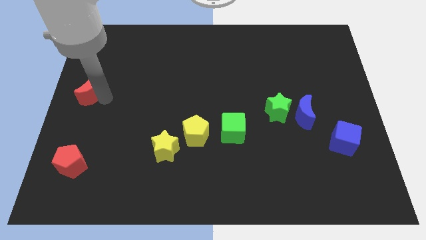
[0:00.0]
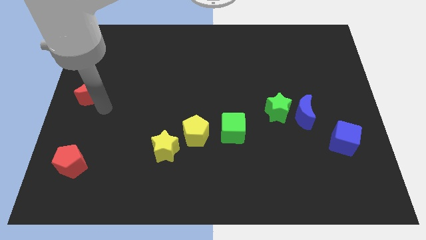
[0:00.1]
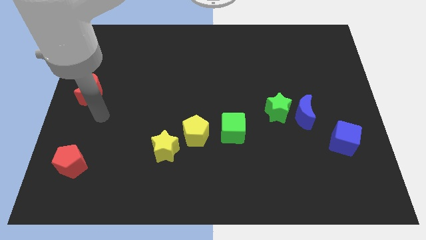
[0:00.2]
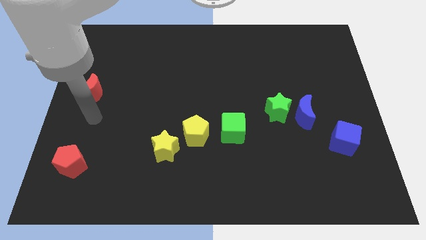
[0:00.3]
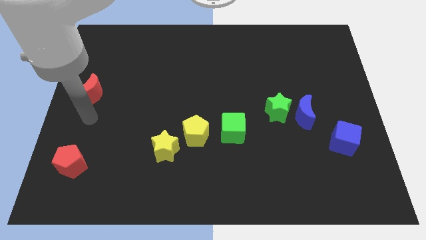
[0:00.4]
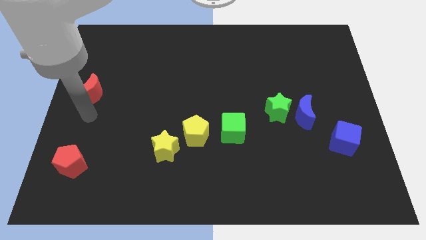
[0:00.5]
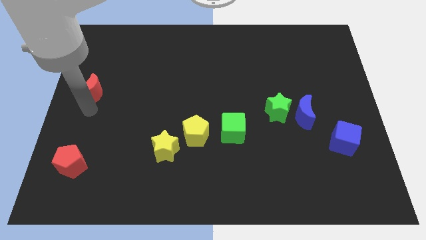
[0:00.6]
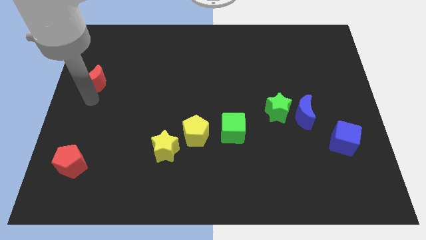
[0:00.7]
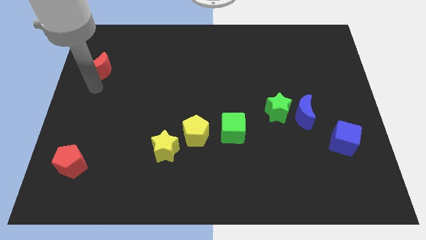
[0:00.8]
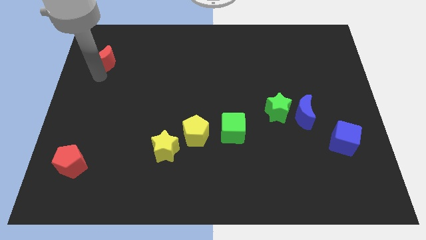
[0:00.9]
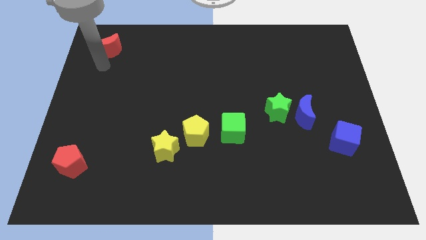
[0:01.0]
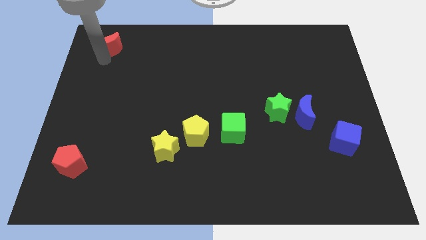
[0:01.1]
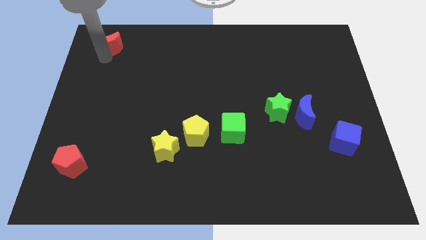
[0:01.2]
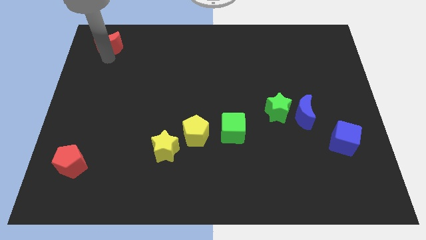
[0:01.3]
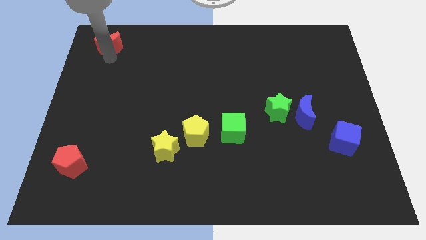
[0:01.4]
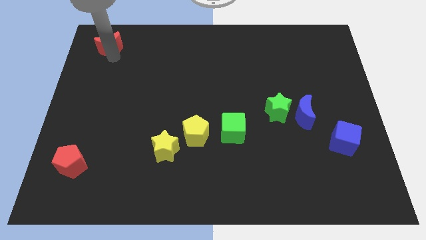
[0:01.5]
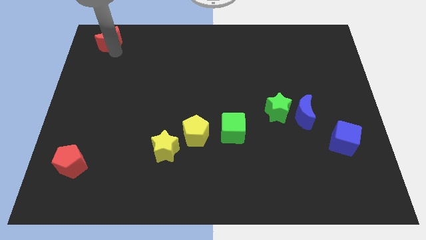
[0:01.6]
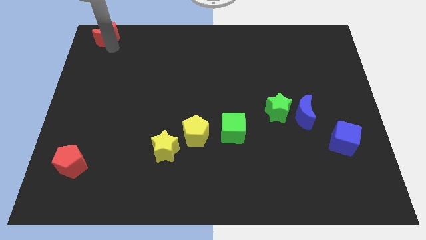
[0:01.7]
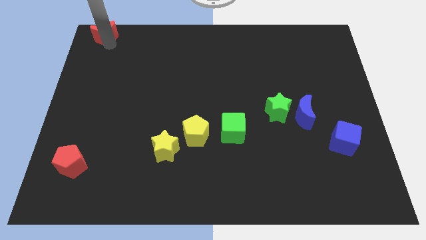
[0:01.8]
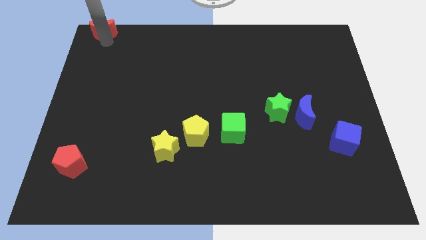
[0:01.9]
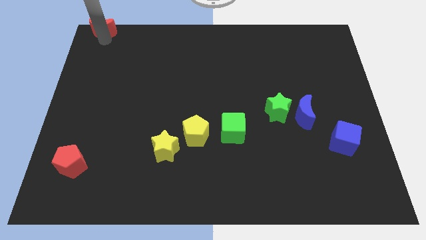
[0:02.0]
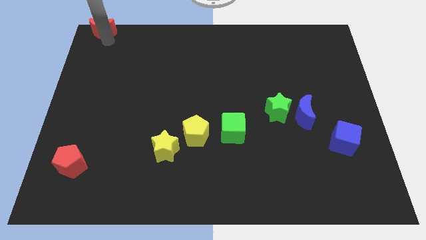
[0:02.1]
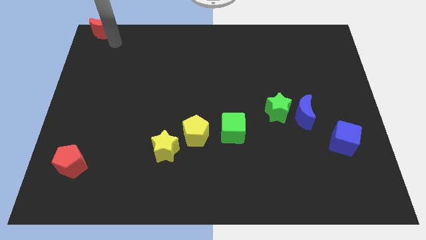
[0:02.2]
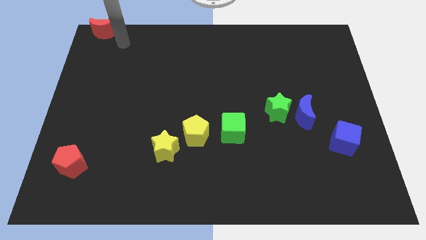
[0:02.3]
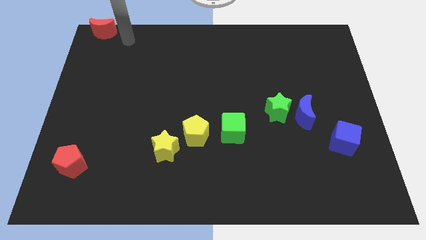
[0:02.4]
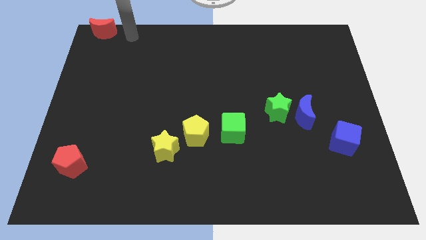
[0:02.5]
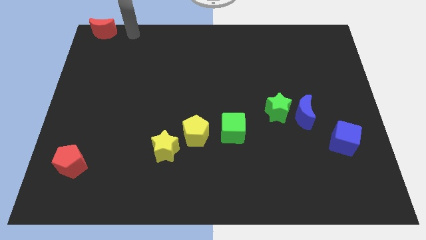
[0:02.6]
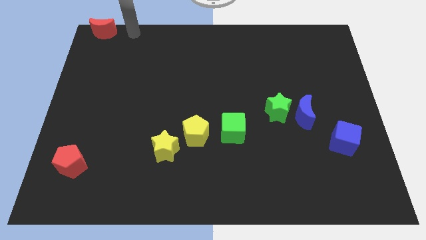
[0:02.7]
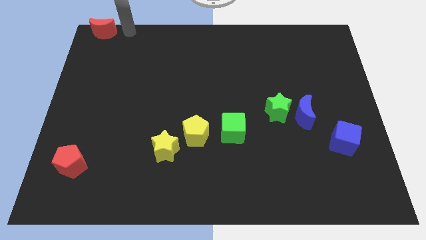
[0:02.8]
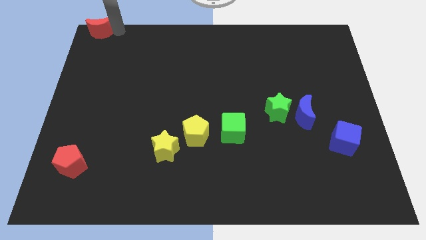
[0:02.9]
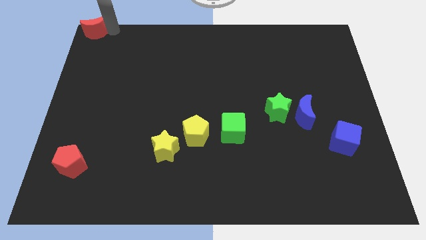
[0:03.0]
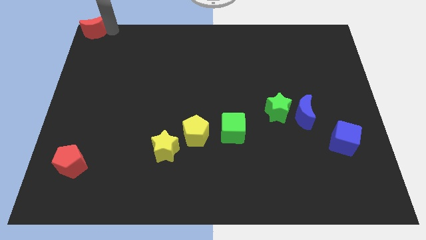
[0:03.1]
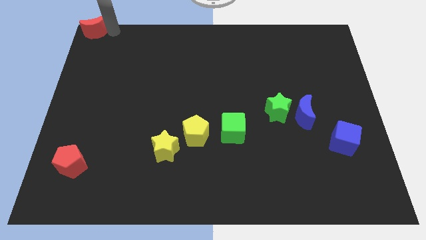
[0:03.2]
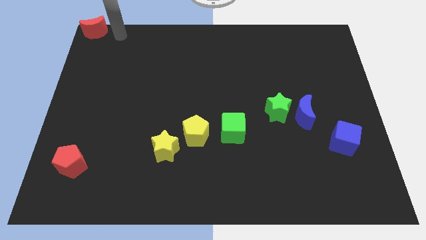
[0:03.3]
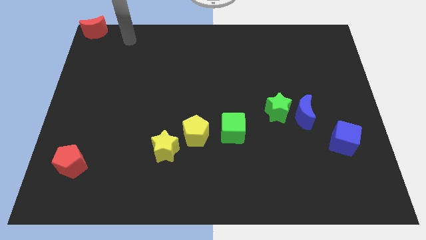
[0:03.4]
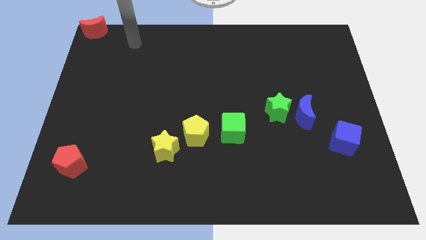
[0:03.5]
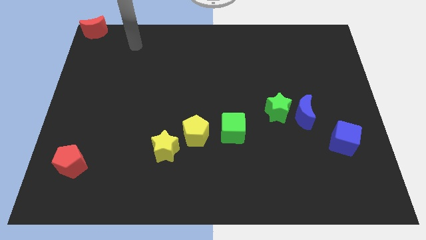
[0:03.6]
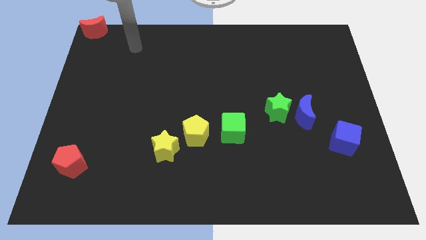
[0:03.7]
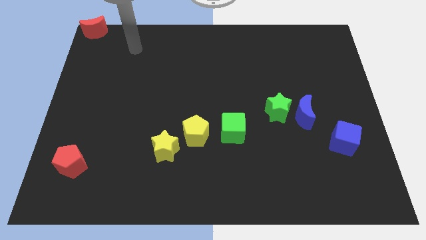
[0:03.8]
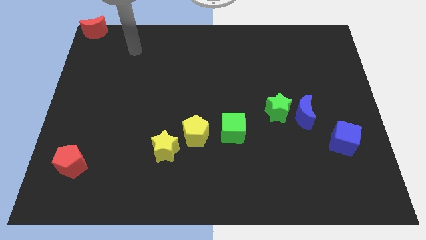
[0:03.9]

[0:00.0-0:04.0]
push red moon towards top right corner of the board

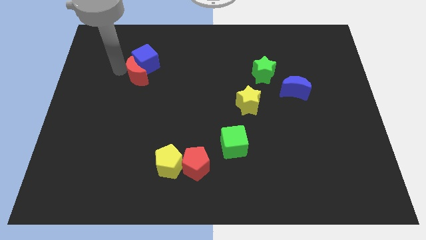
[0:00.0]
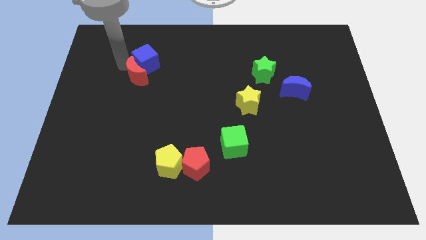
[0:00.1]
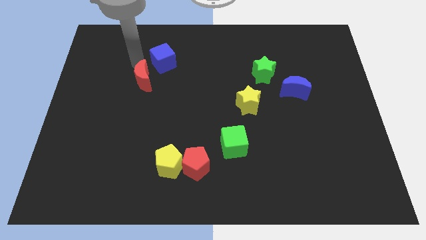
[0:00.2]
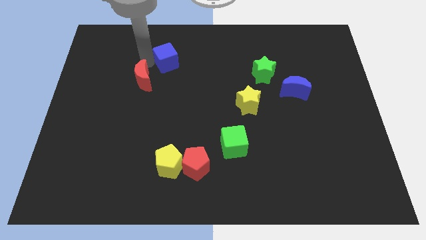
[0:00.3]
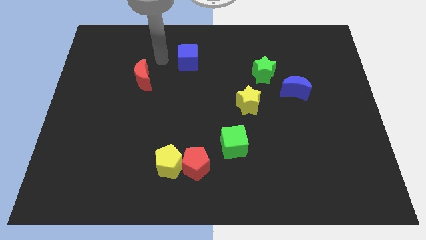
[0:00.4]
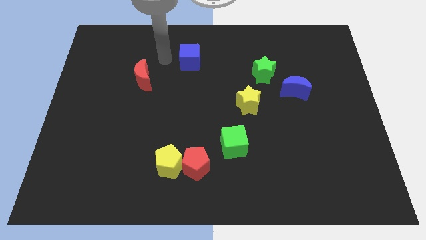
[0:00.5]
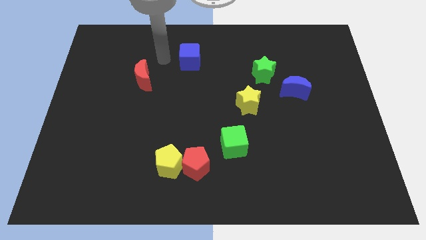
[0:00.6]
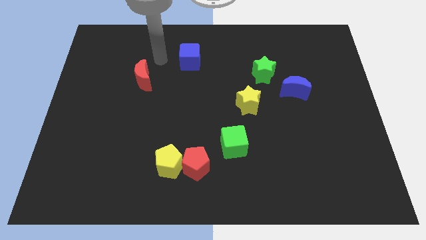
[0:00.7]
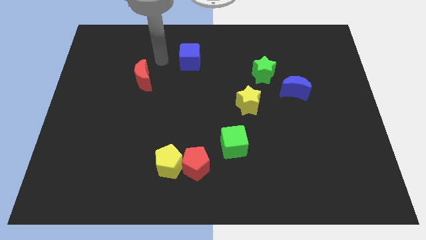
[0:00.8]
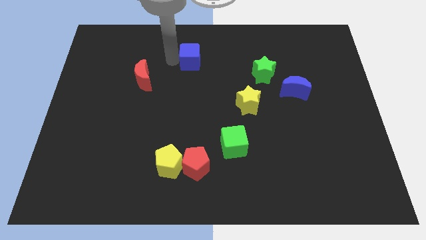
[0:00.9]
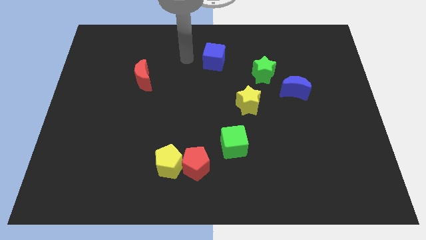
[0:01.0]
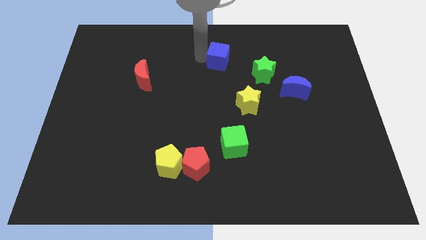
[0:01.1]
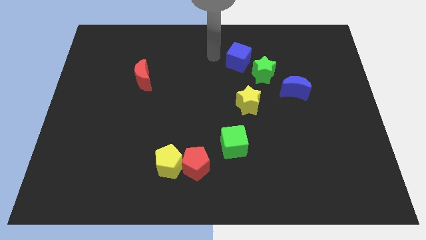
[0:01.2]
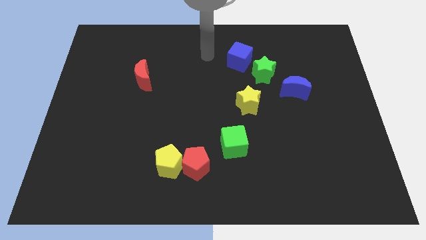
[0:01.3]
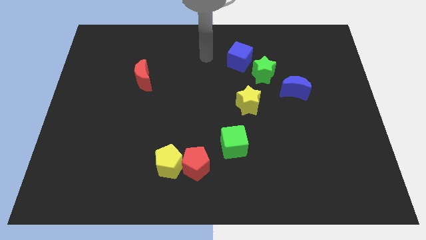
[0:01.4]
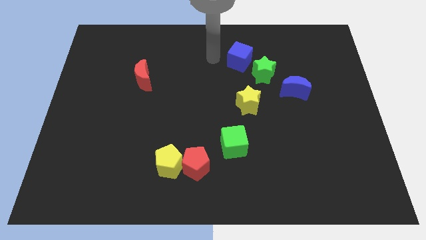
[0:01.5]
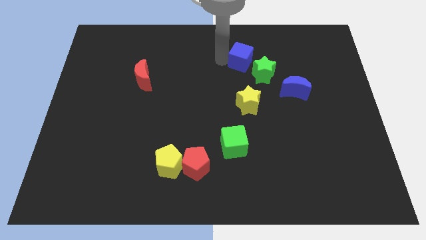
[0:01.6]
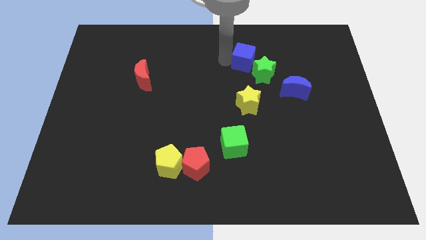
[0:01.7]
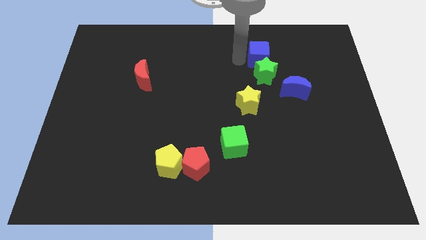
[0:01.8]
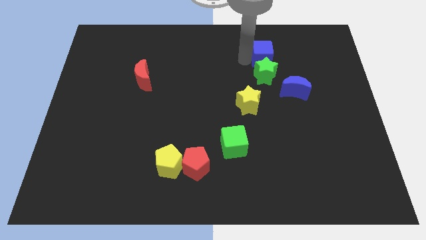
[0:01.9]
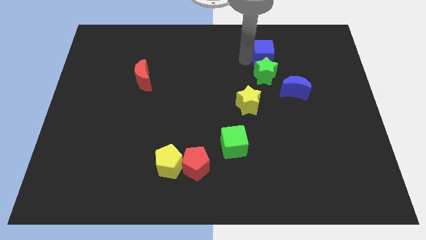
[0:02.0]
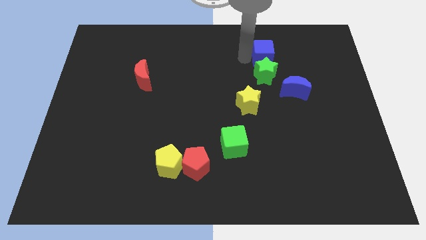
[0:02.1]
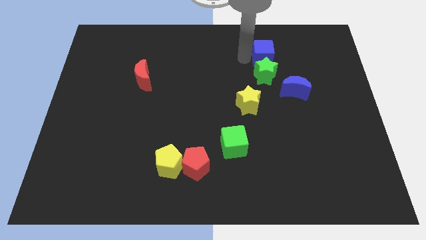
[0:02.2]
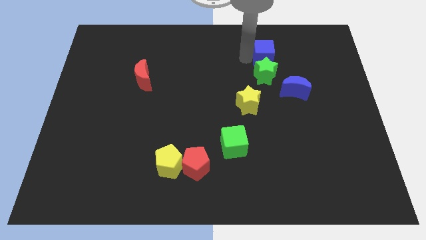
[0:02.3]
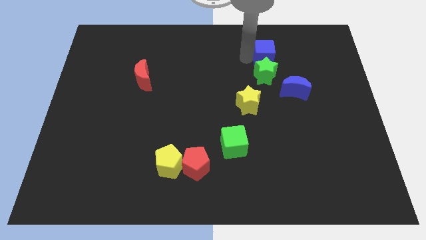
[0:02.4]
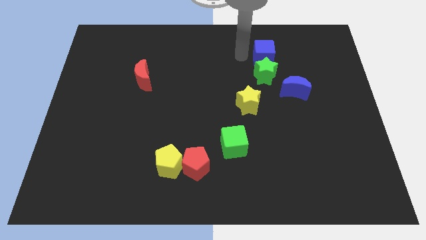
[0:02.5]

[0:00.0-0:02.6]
apart blue cube and red crescent

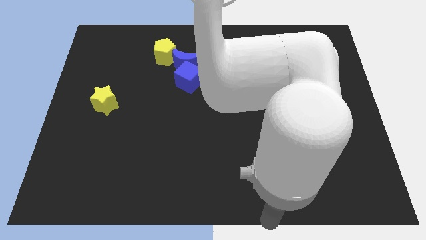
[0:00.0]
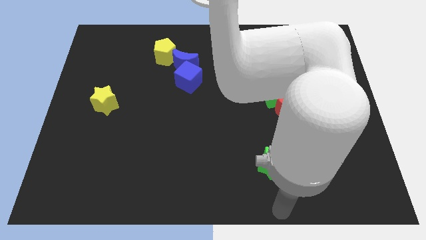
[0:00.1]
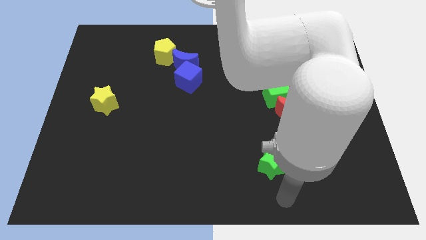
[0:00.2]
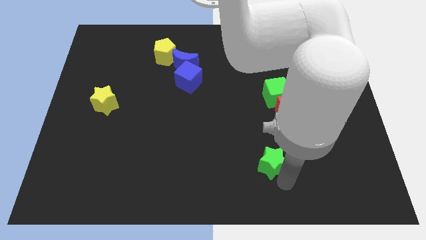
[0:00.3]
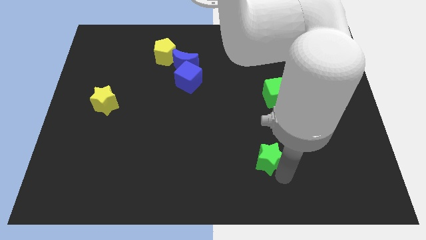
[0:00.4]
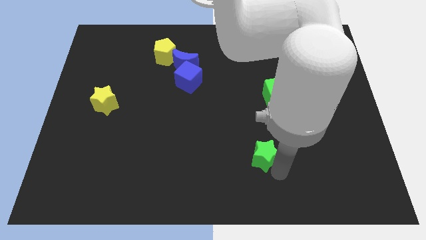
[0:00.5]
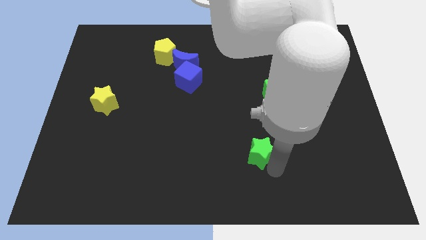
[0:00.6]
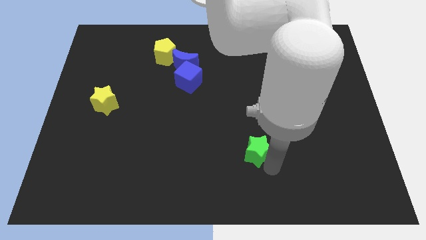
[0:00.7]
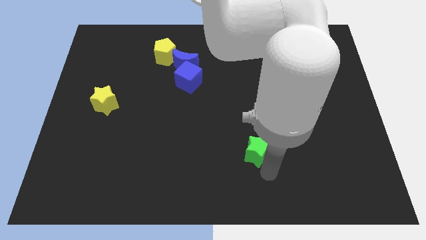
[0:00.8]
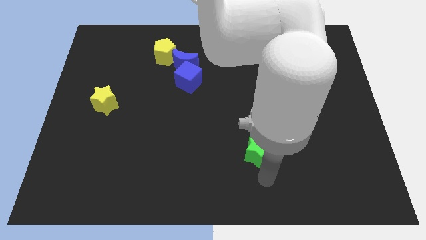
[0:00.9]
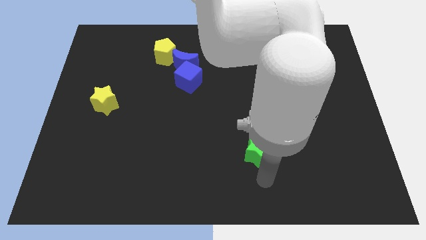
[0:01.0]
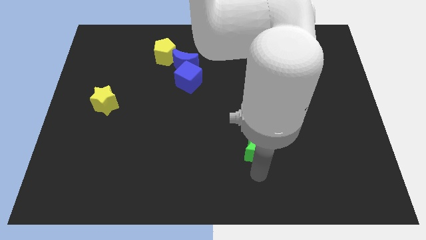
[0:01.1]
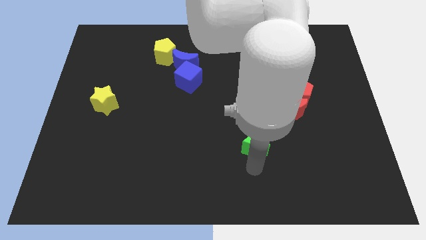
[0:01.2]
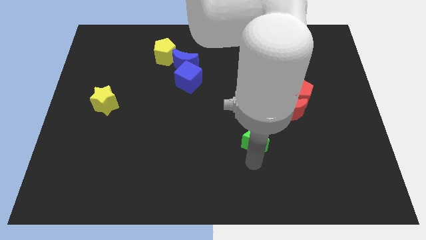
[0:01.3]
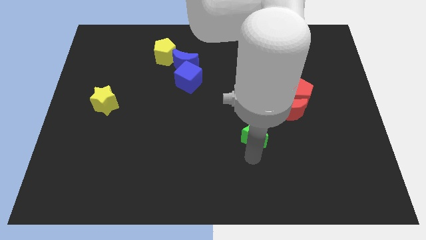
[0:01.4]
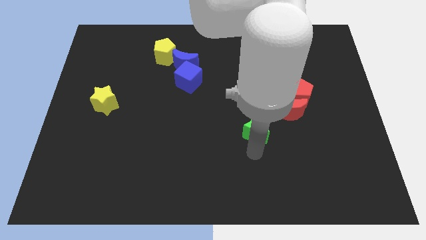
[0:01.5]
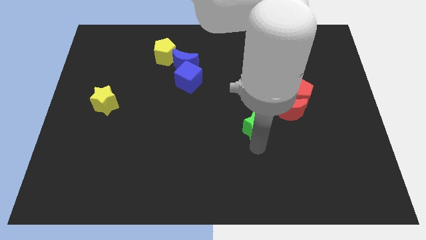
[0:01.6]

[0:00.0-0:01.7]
push the green star to the bottom of the green cube

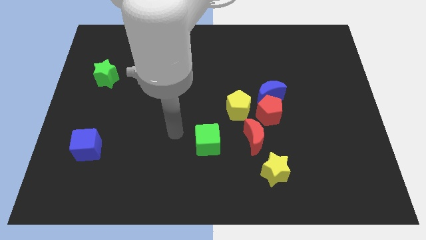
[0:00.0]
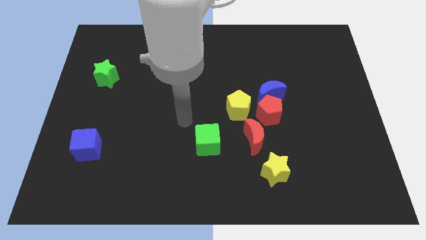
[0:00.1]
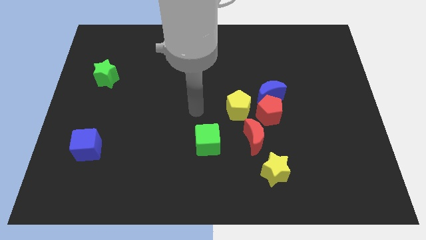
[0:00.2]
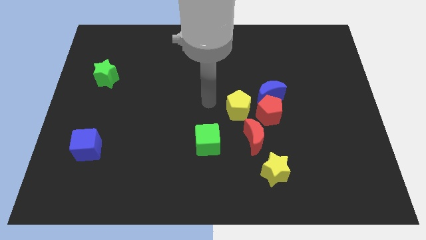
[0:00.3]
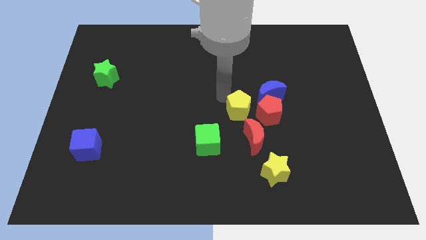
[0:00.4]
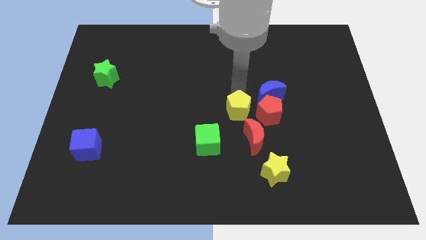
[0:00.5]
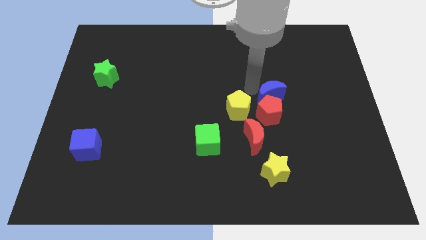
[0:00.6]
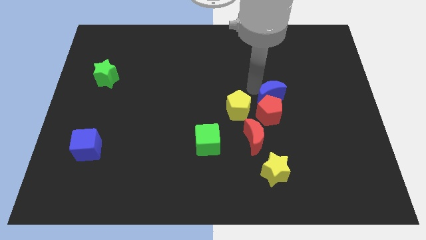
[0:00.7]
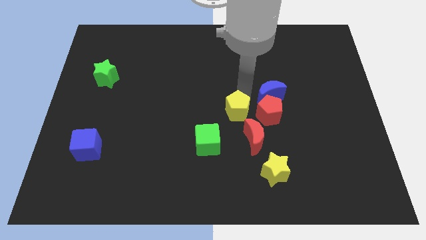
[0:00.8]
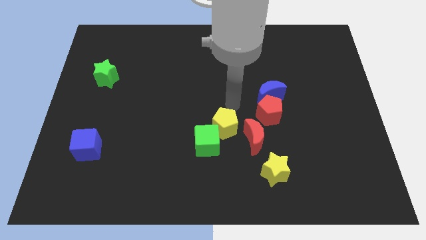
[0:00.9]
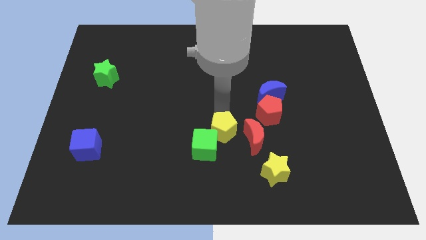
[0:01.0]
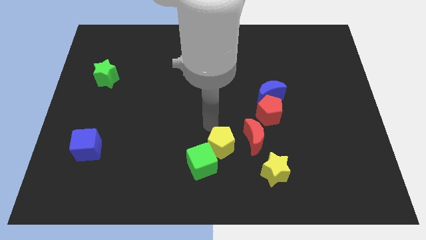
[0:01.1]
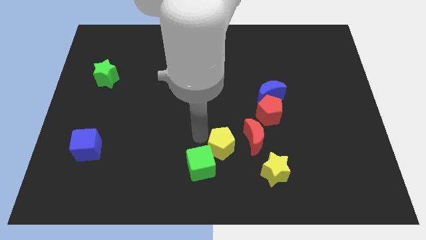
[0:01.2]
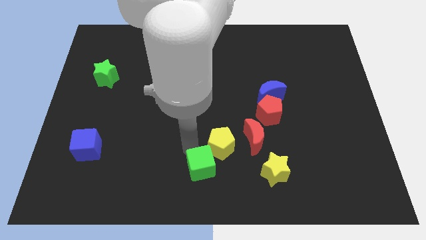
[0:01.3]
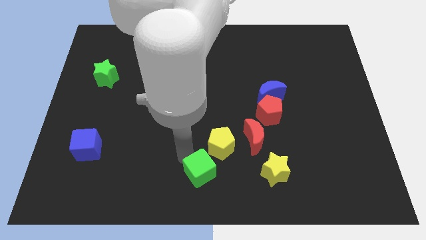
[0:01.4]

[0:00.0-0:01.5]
push the yellow pentagon into the green cube
